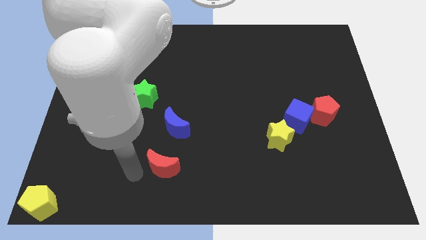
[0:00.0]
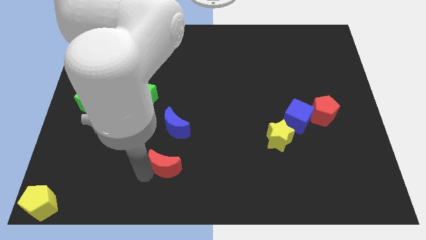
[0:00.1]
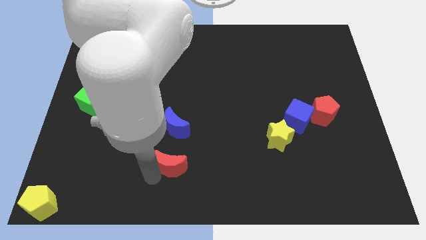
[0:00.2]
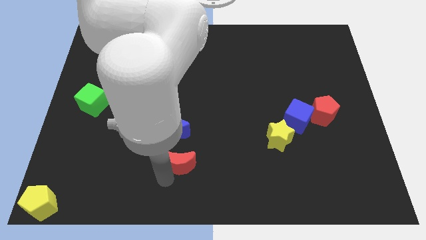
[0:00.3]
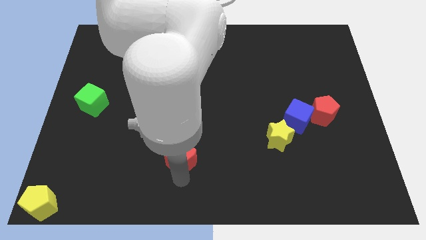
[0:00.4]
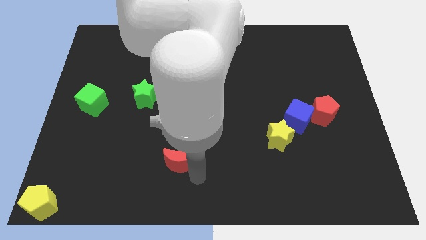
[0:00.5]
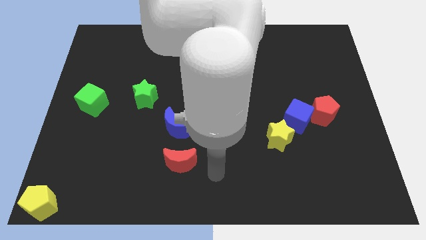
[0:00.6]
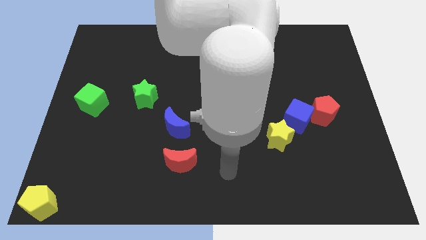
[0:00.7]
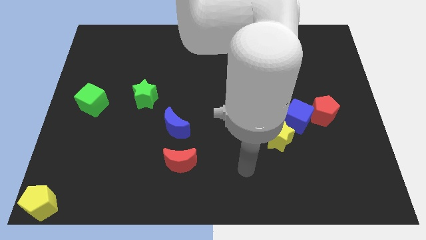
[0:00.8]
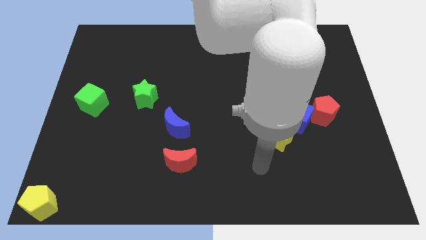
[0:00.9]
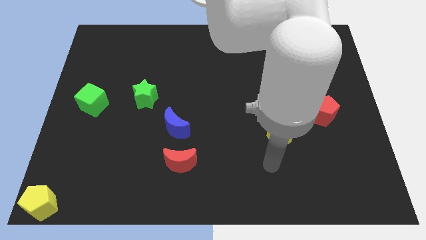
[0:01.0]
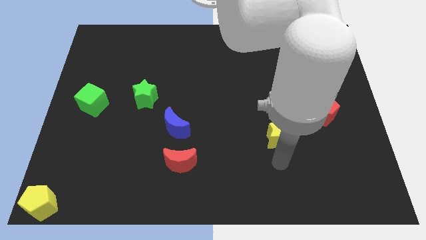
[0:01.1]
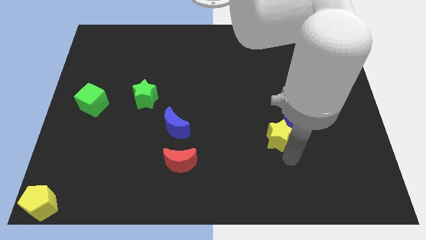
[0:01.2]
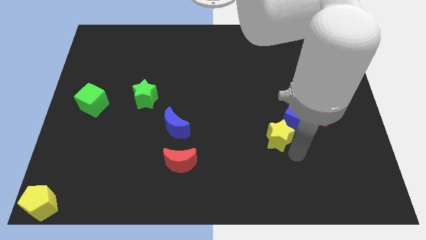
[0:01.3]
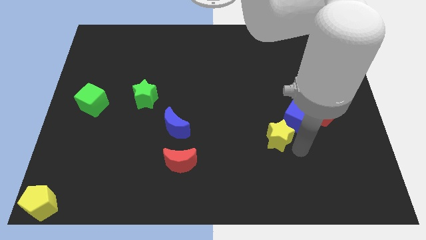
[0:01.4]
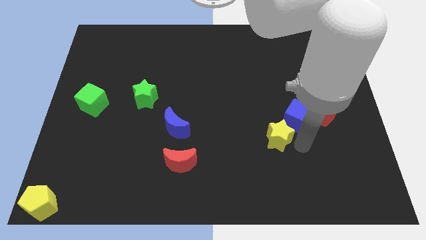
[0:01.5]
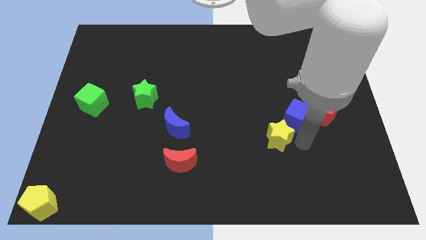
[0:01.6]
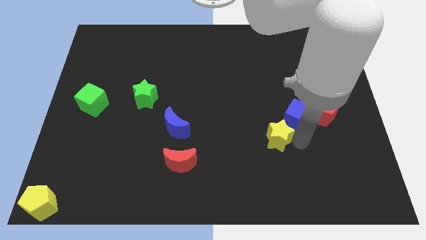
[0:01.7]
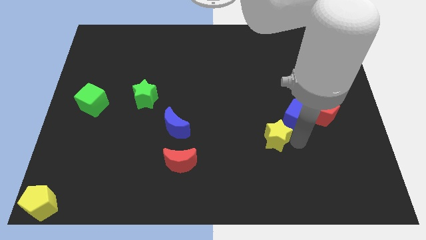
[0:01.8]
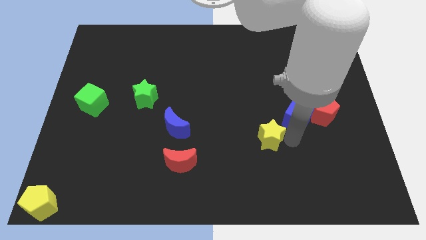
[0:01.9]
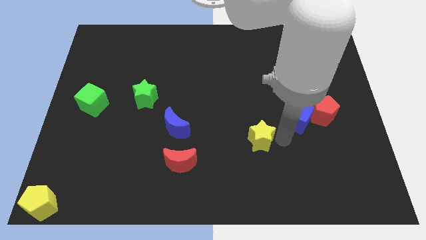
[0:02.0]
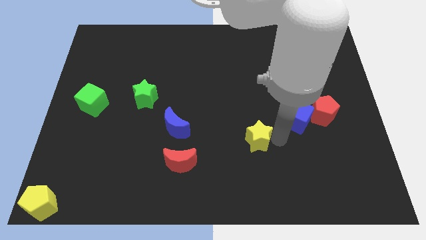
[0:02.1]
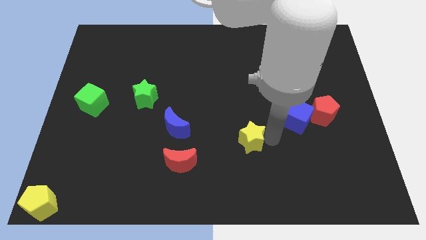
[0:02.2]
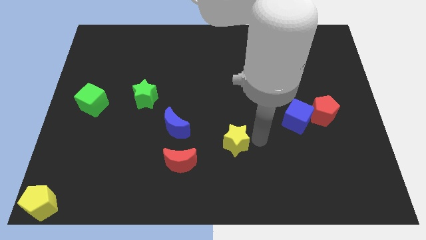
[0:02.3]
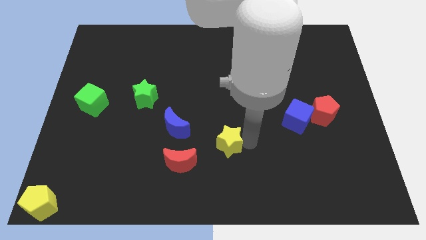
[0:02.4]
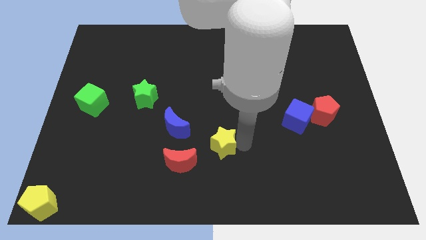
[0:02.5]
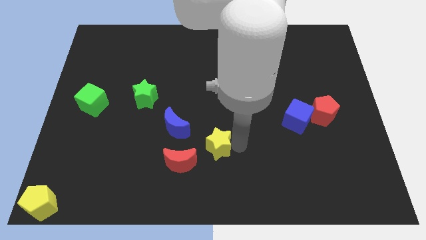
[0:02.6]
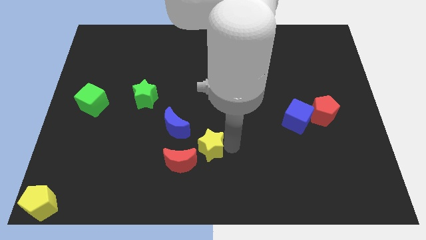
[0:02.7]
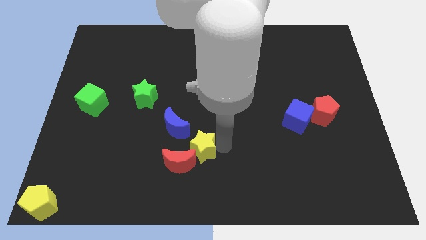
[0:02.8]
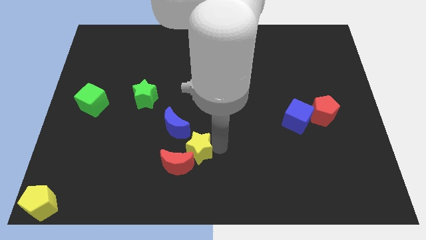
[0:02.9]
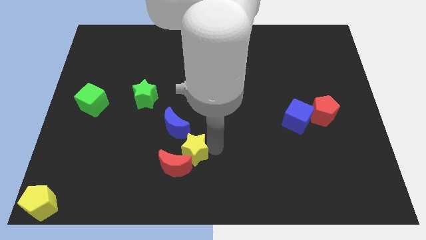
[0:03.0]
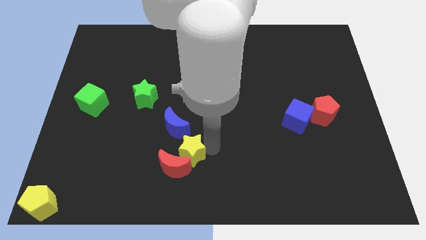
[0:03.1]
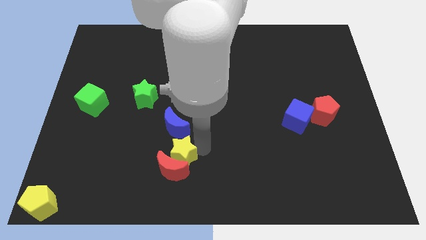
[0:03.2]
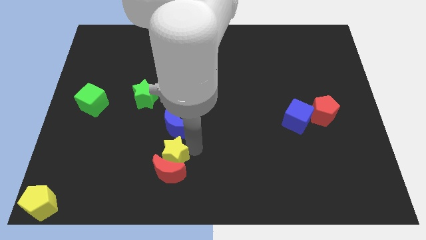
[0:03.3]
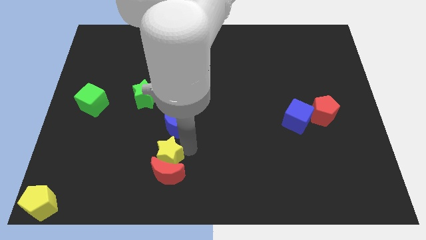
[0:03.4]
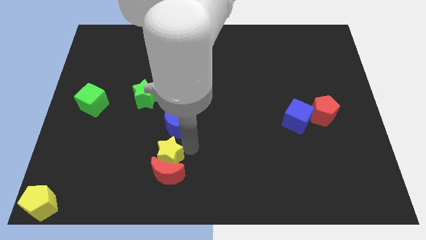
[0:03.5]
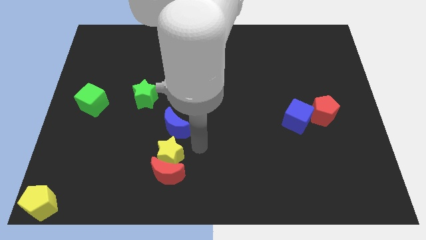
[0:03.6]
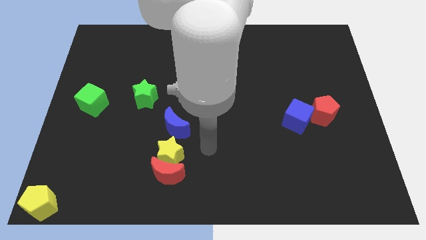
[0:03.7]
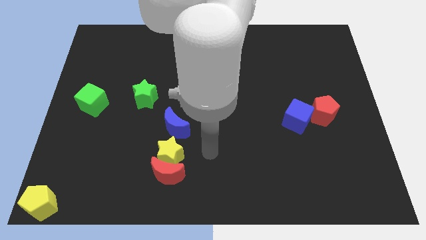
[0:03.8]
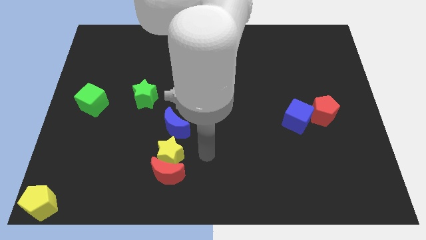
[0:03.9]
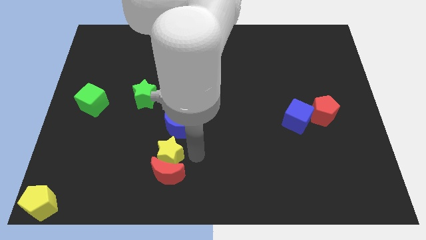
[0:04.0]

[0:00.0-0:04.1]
push the yellow star into the red crescent

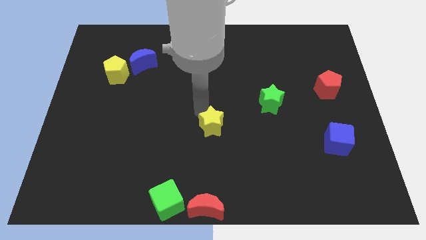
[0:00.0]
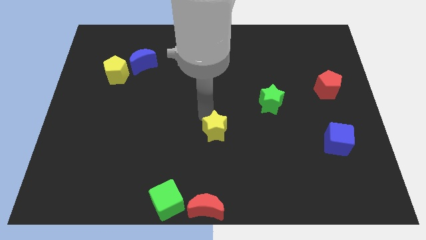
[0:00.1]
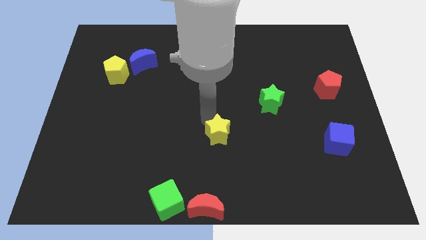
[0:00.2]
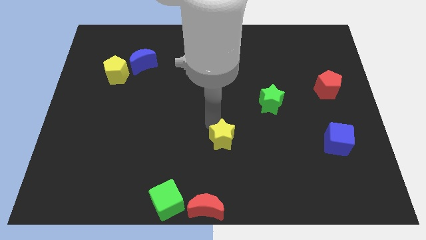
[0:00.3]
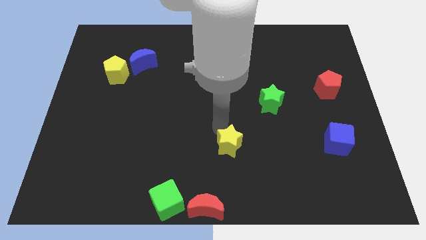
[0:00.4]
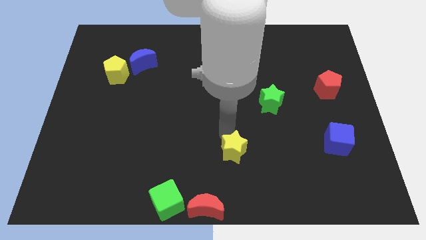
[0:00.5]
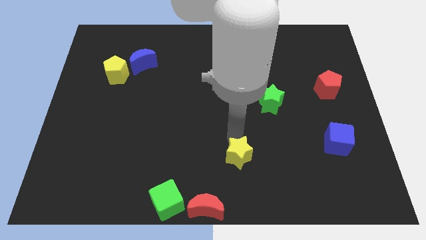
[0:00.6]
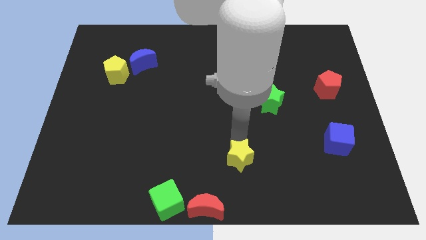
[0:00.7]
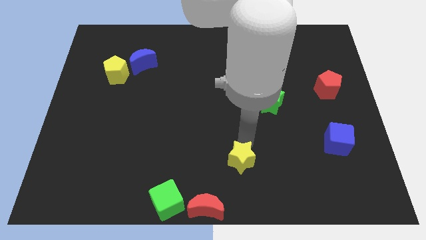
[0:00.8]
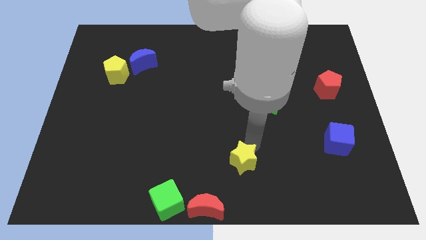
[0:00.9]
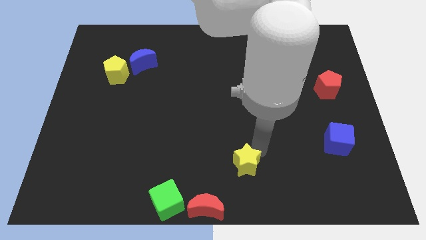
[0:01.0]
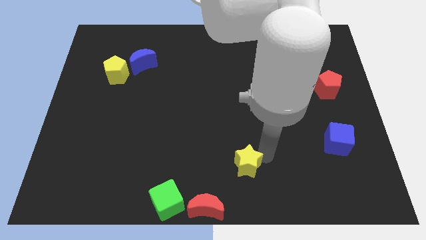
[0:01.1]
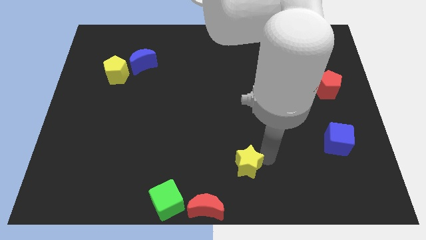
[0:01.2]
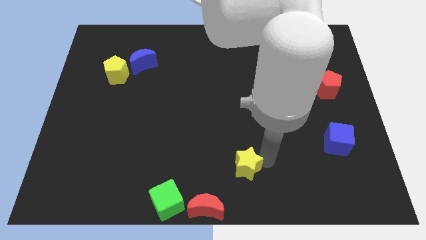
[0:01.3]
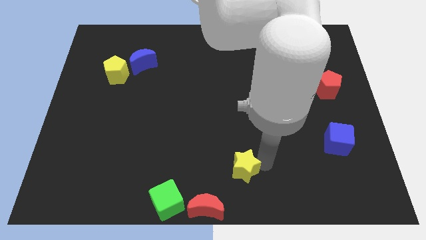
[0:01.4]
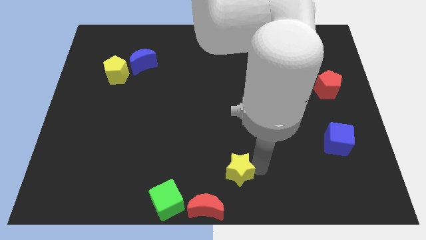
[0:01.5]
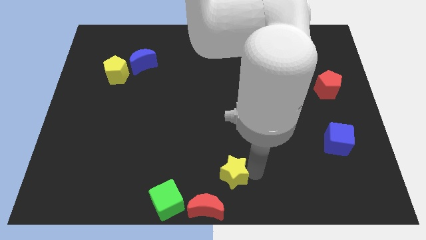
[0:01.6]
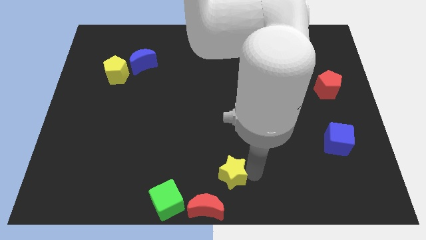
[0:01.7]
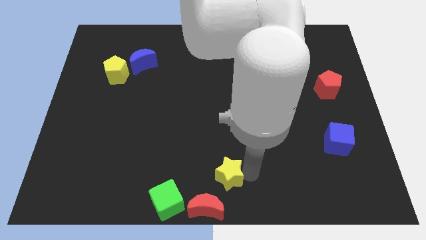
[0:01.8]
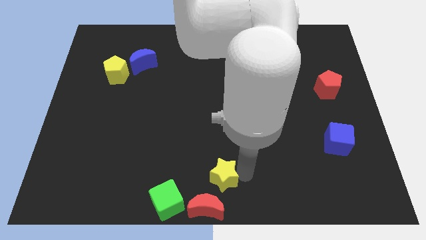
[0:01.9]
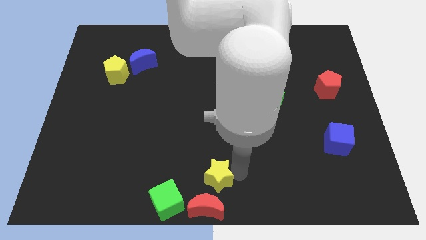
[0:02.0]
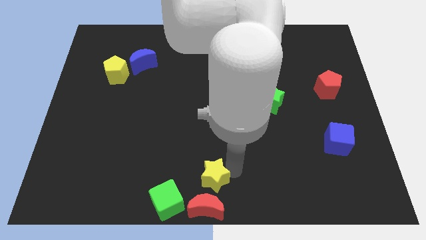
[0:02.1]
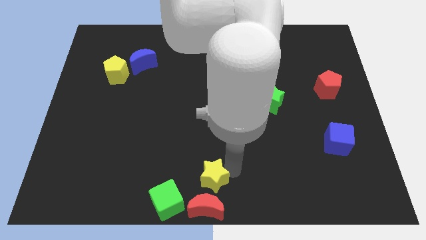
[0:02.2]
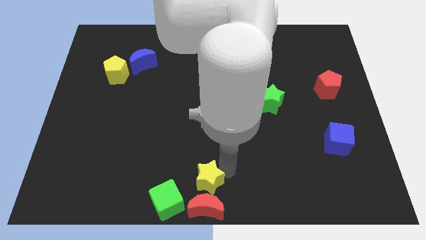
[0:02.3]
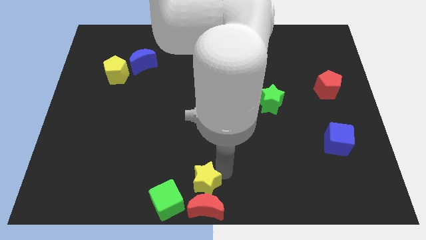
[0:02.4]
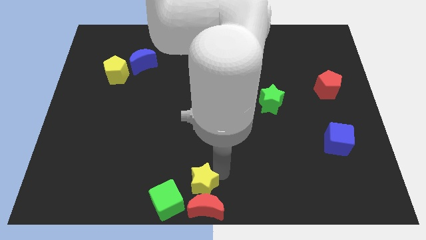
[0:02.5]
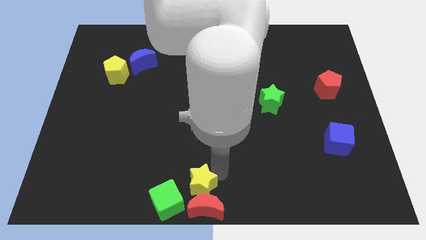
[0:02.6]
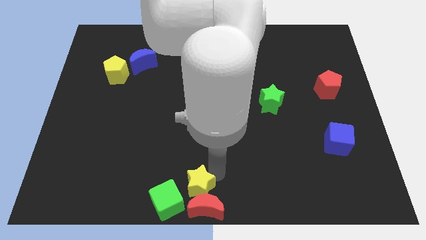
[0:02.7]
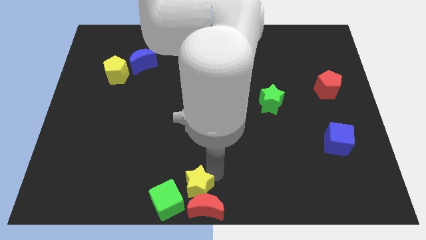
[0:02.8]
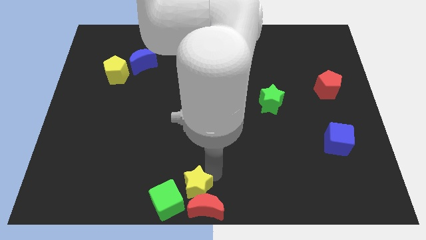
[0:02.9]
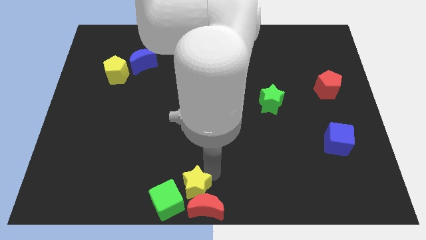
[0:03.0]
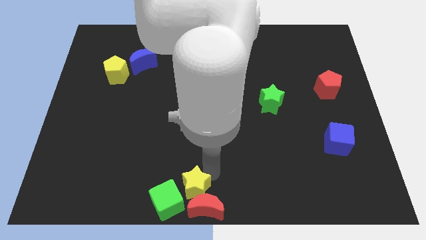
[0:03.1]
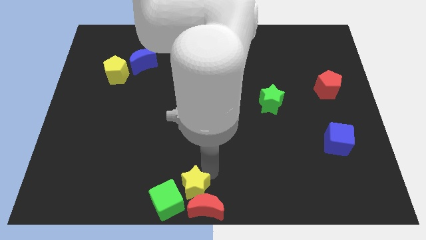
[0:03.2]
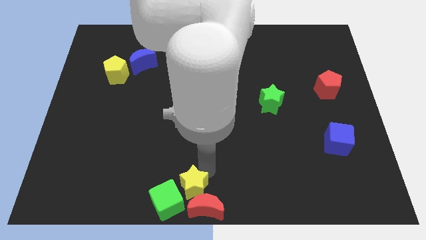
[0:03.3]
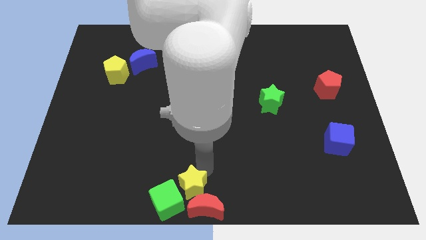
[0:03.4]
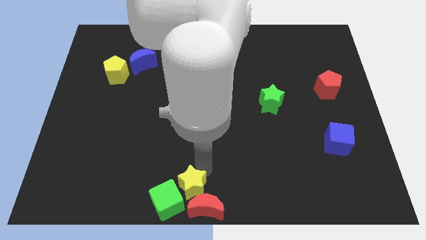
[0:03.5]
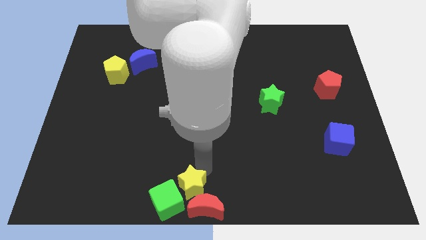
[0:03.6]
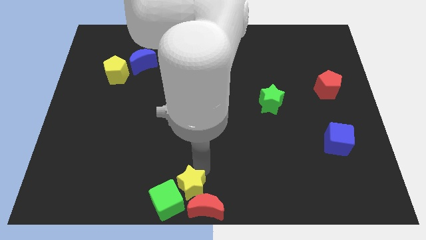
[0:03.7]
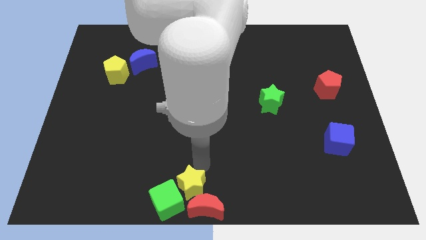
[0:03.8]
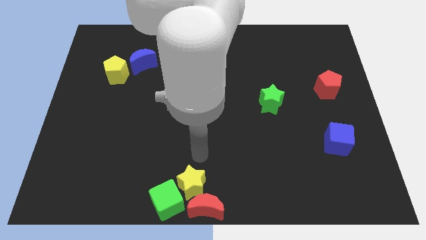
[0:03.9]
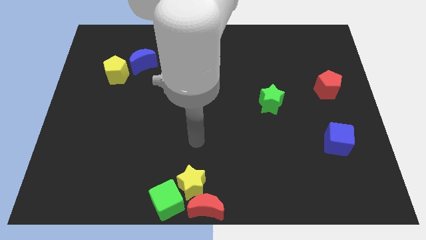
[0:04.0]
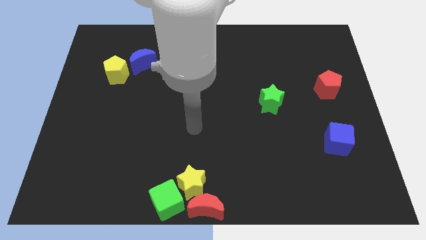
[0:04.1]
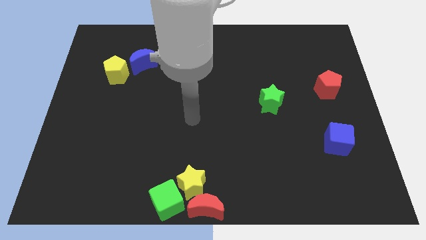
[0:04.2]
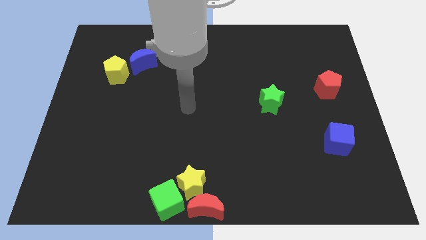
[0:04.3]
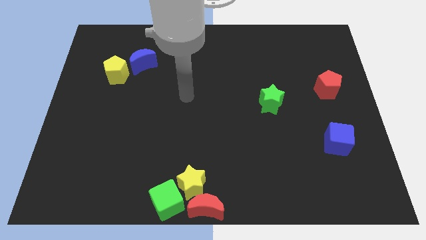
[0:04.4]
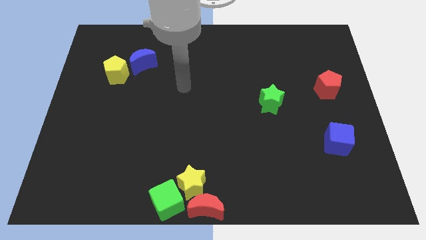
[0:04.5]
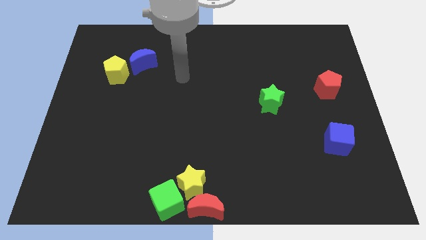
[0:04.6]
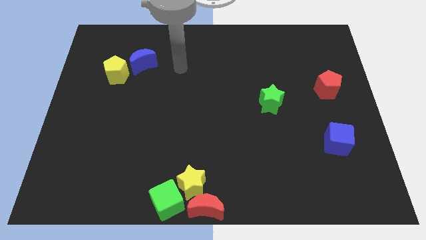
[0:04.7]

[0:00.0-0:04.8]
place the yellow star in between the green cube and red crescent

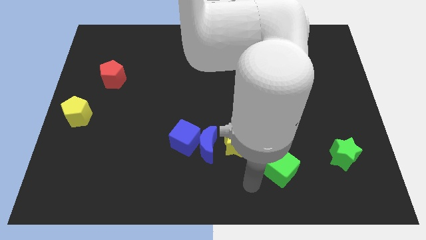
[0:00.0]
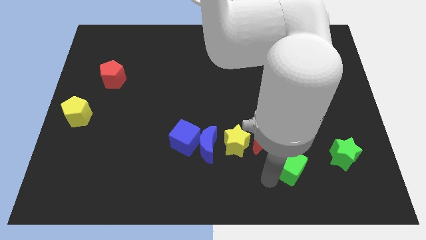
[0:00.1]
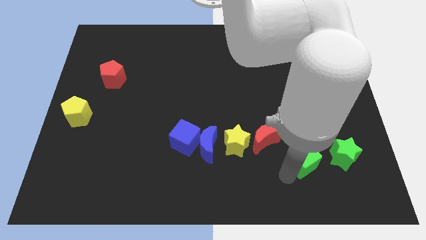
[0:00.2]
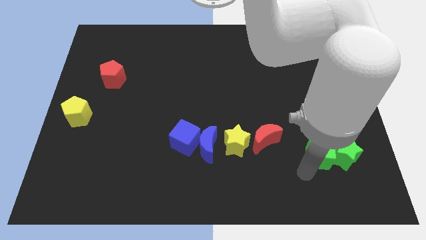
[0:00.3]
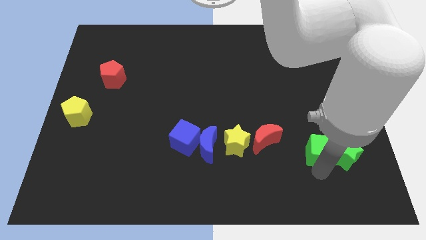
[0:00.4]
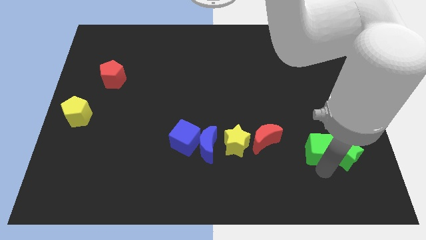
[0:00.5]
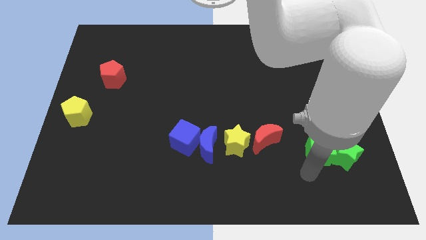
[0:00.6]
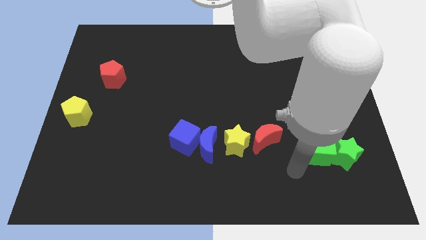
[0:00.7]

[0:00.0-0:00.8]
push the green cube into the left side of the green star
